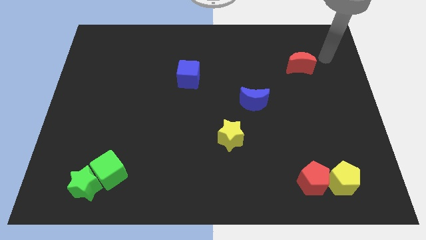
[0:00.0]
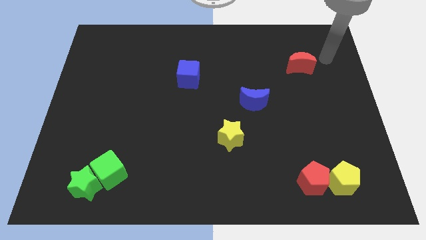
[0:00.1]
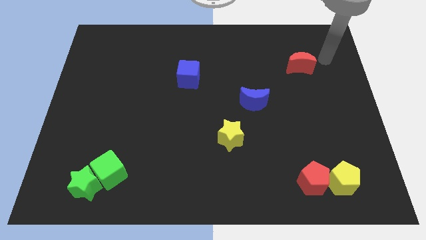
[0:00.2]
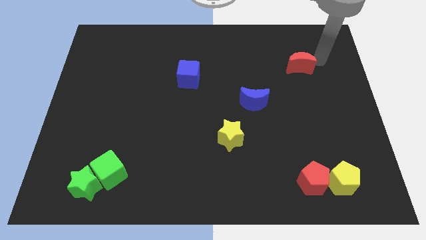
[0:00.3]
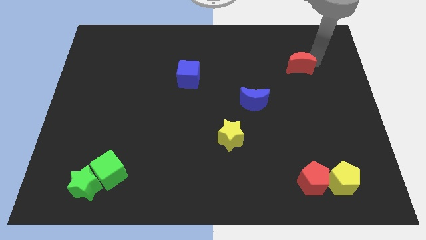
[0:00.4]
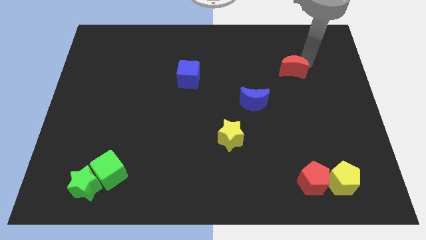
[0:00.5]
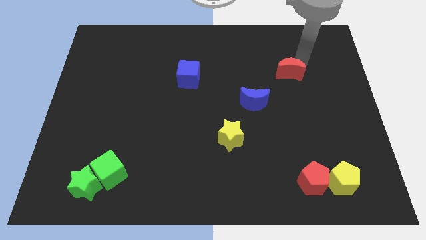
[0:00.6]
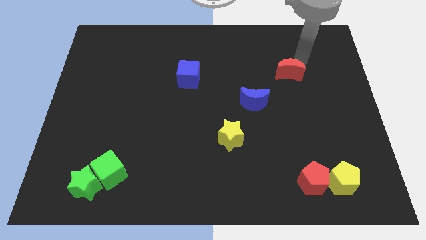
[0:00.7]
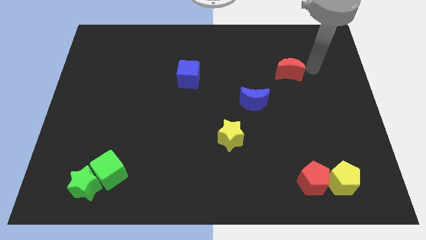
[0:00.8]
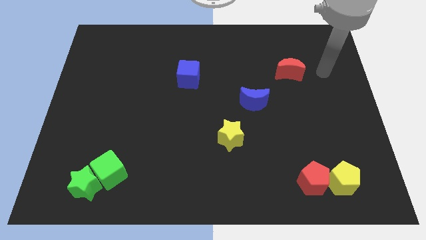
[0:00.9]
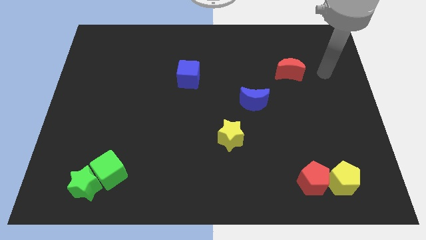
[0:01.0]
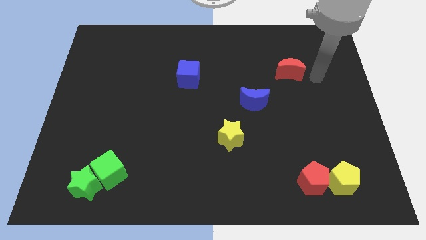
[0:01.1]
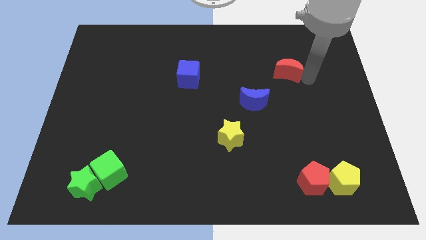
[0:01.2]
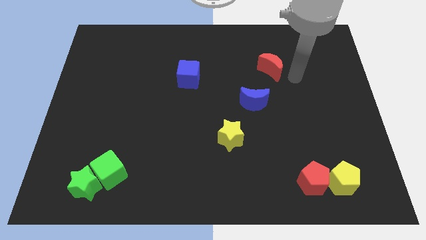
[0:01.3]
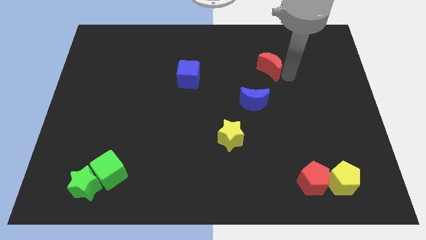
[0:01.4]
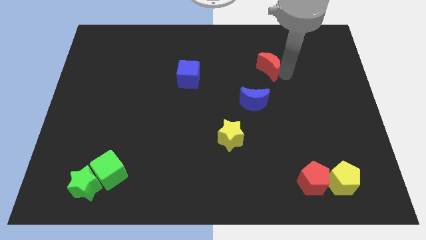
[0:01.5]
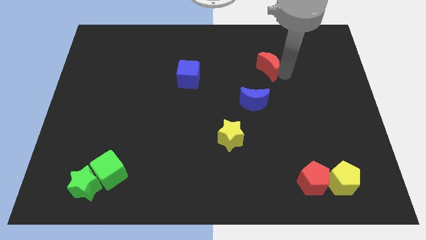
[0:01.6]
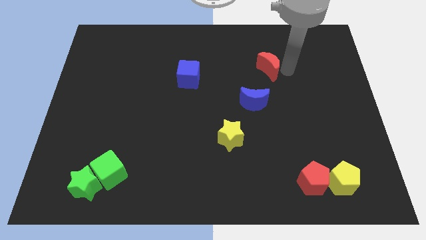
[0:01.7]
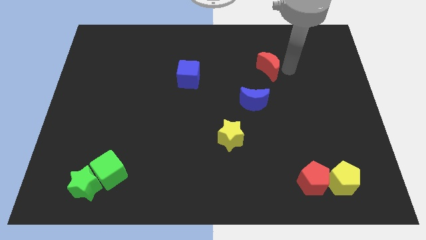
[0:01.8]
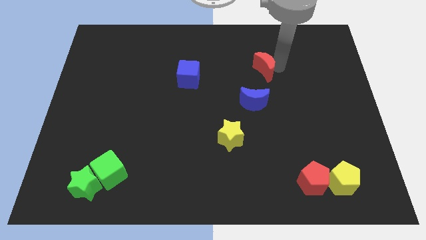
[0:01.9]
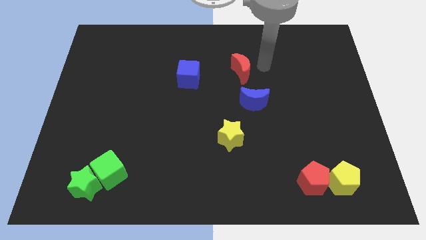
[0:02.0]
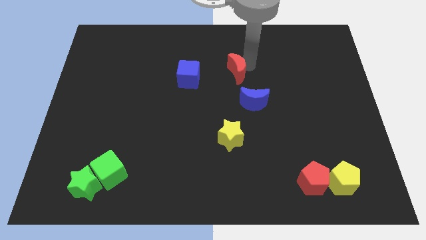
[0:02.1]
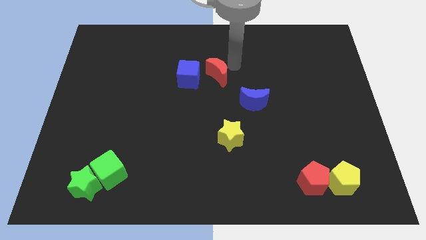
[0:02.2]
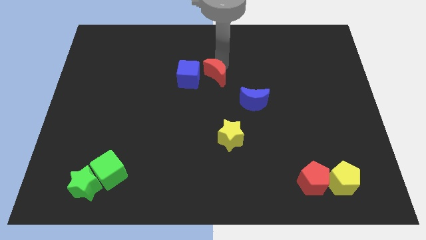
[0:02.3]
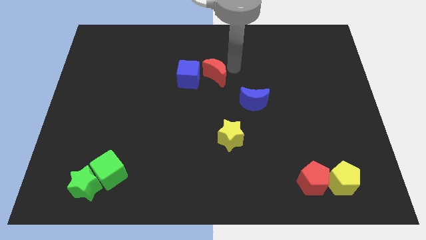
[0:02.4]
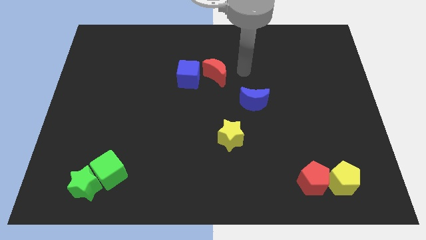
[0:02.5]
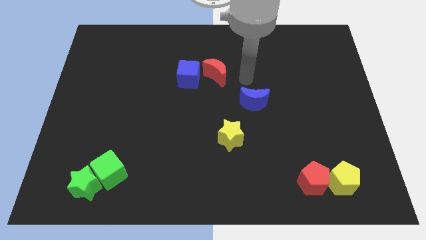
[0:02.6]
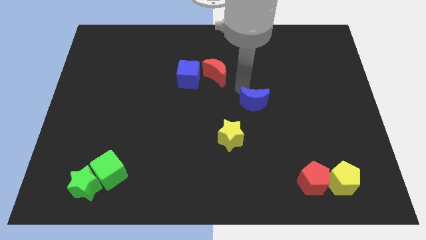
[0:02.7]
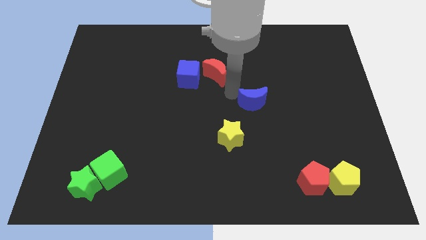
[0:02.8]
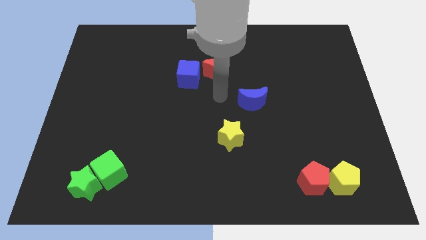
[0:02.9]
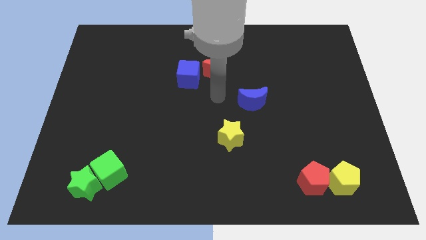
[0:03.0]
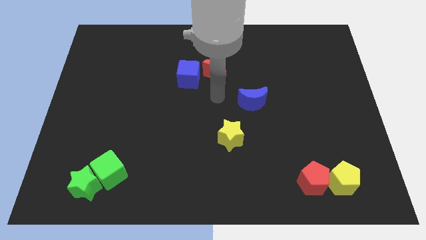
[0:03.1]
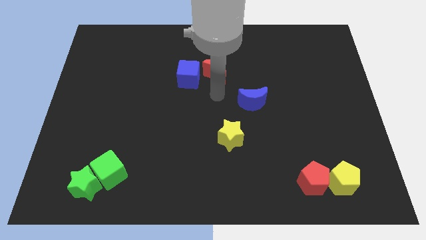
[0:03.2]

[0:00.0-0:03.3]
push the red crescent to the right side of the blue cube

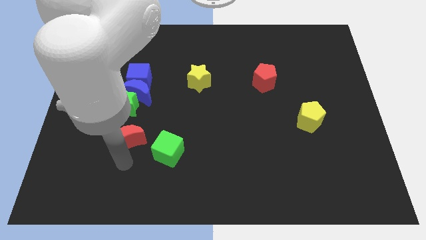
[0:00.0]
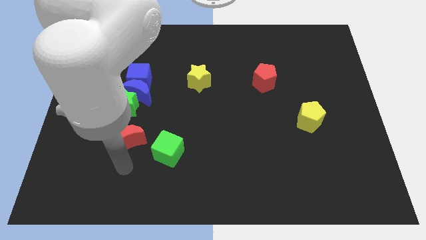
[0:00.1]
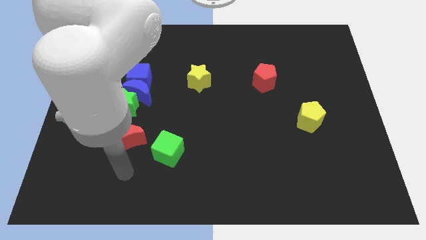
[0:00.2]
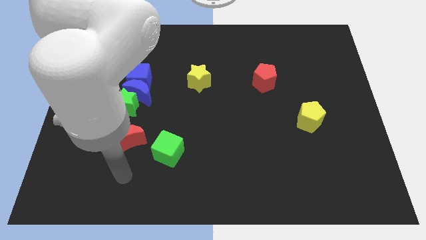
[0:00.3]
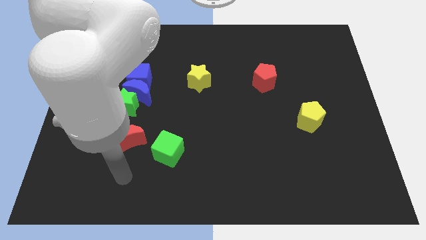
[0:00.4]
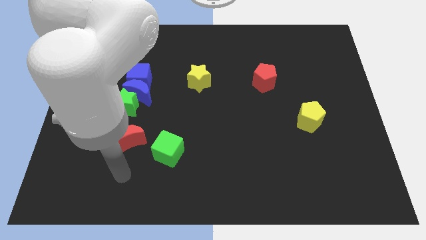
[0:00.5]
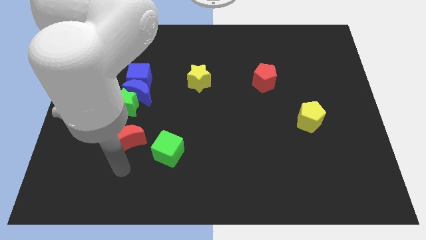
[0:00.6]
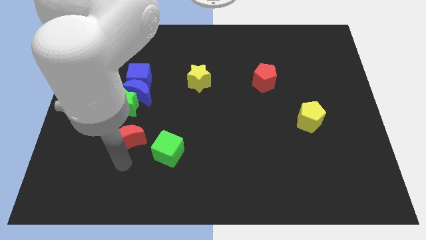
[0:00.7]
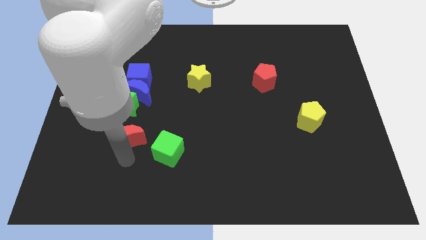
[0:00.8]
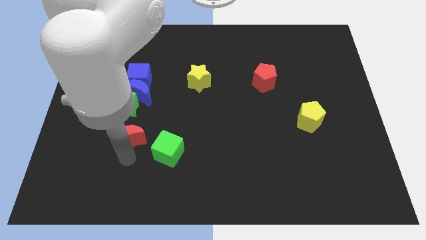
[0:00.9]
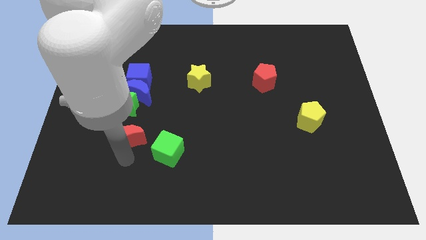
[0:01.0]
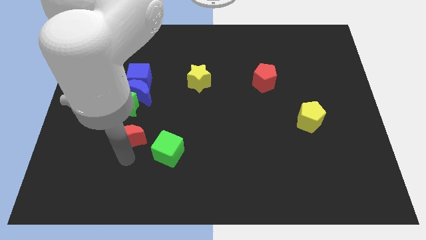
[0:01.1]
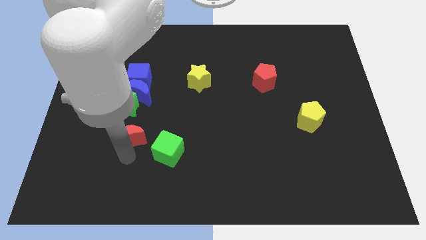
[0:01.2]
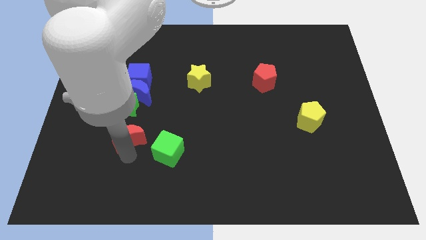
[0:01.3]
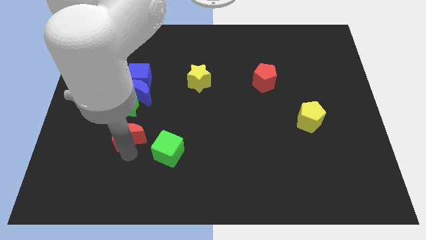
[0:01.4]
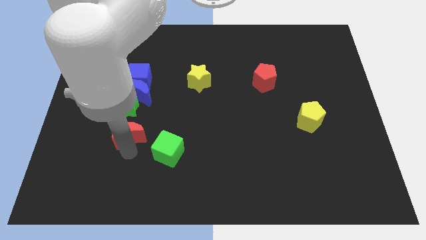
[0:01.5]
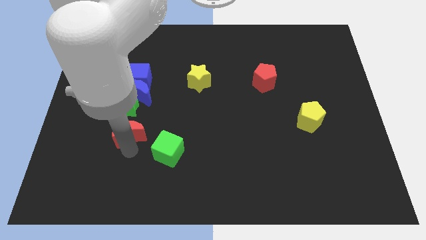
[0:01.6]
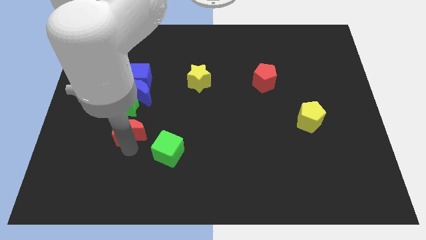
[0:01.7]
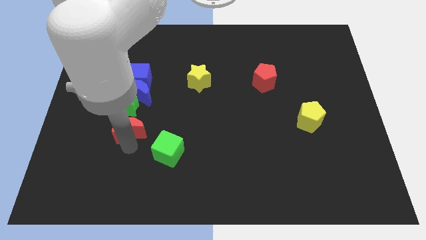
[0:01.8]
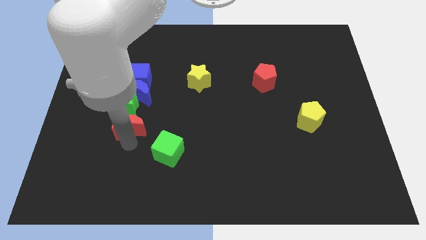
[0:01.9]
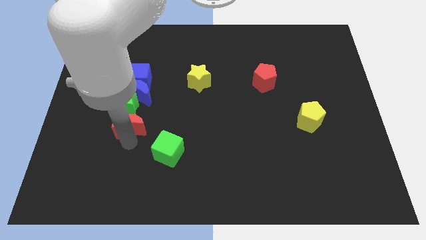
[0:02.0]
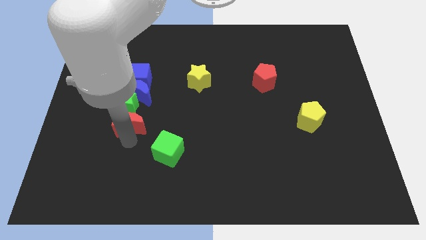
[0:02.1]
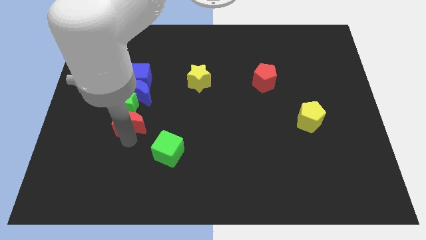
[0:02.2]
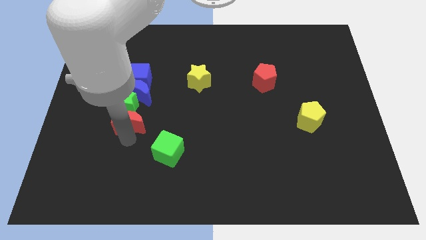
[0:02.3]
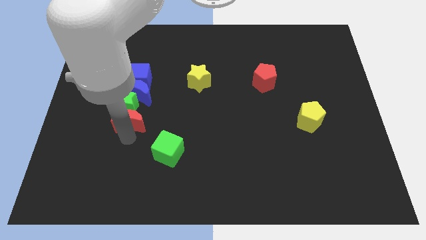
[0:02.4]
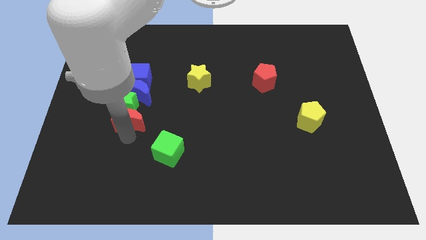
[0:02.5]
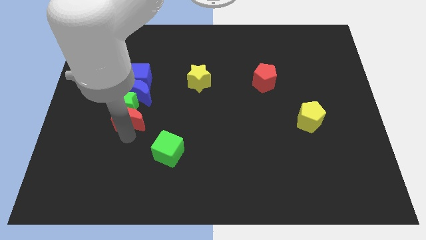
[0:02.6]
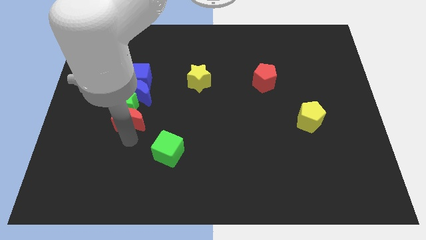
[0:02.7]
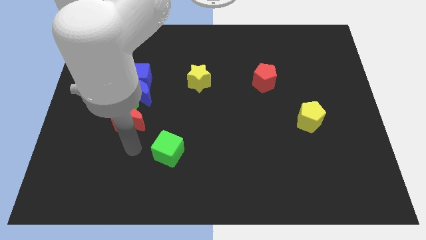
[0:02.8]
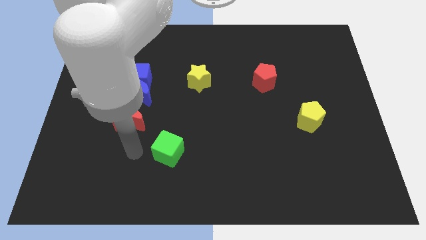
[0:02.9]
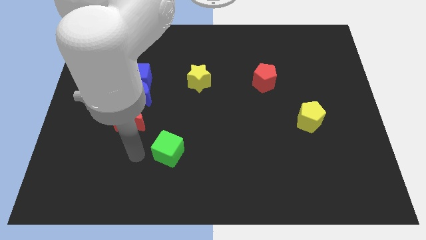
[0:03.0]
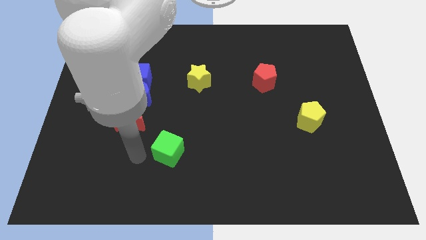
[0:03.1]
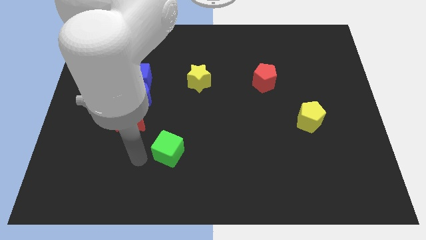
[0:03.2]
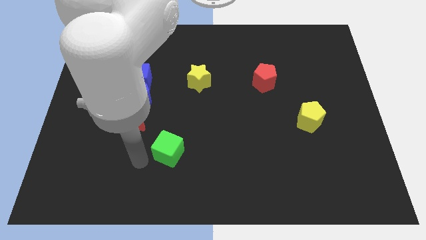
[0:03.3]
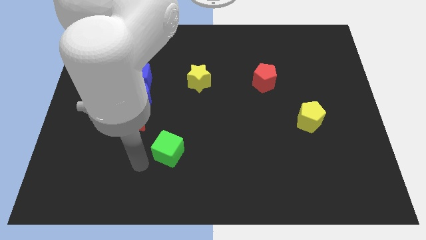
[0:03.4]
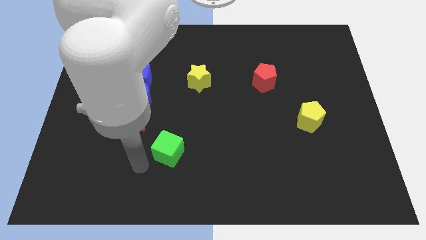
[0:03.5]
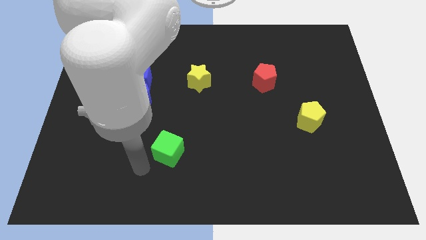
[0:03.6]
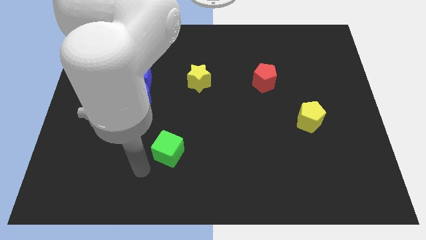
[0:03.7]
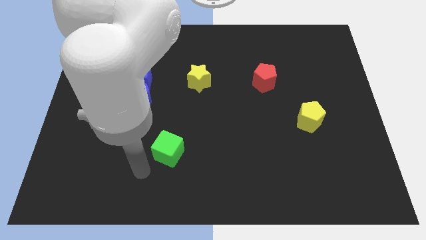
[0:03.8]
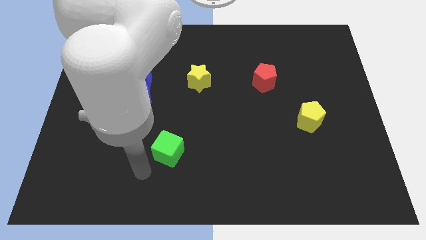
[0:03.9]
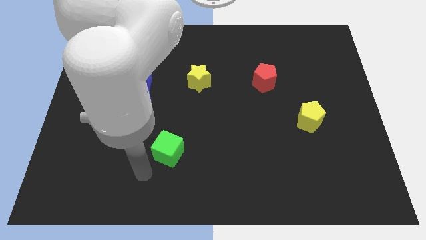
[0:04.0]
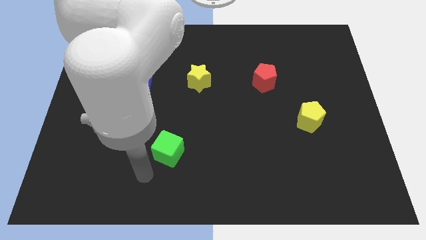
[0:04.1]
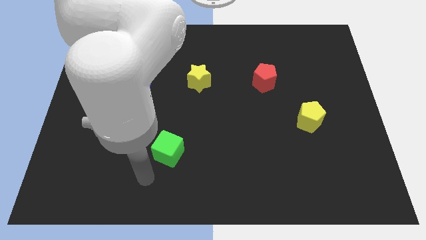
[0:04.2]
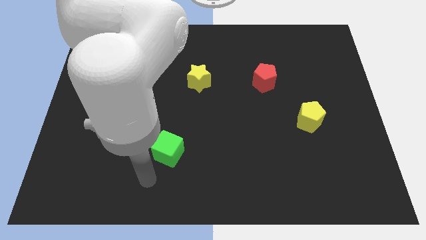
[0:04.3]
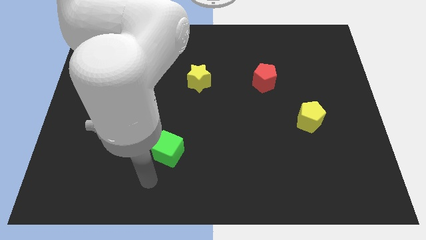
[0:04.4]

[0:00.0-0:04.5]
push red moon below green star

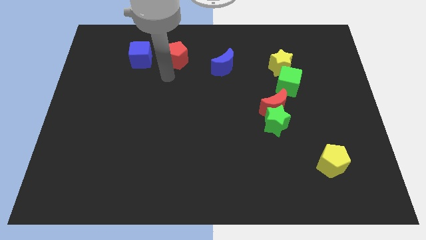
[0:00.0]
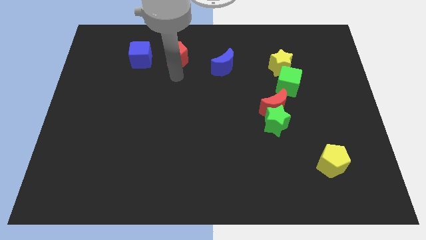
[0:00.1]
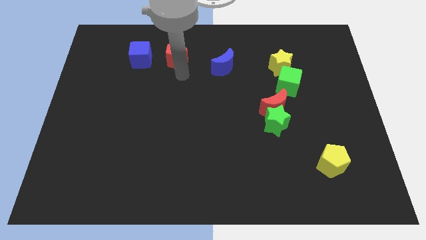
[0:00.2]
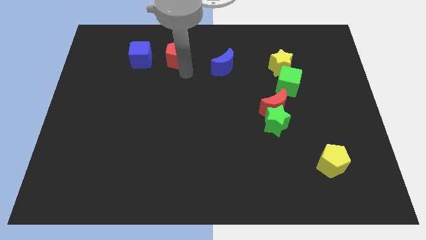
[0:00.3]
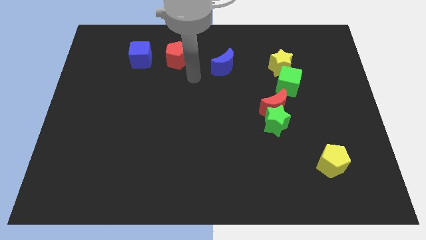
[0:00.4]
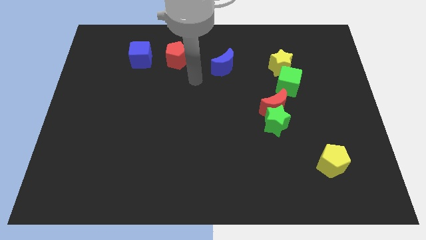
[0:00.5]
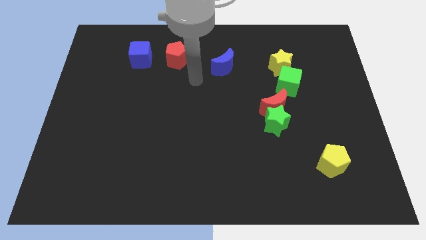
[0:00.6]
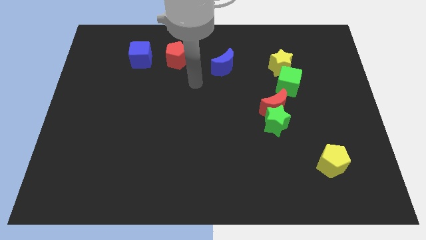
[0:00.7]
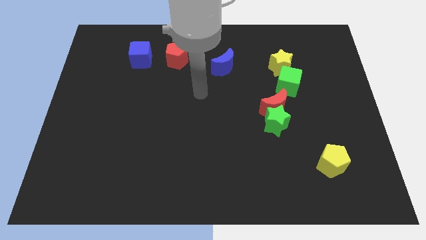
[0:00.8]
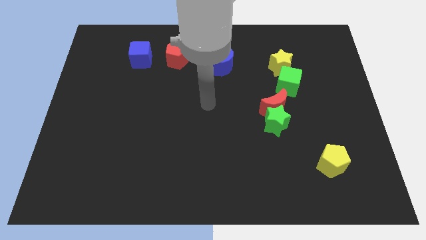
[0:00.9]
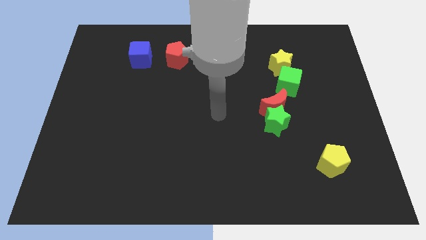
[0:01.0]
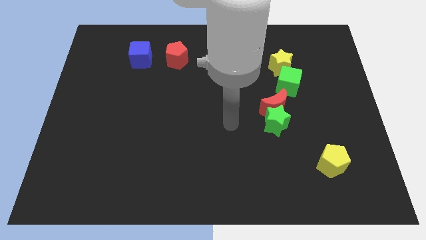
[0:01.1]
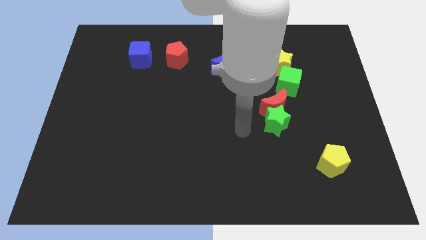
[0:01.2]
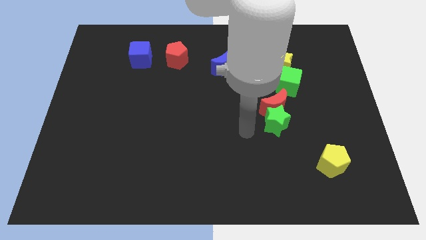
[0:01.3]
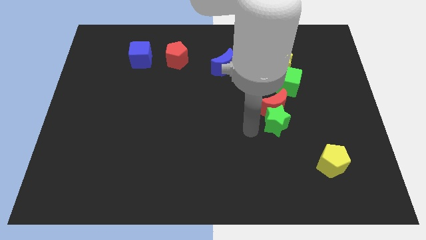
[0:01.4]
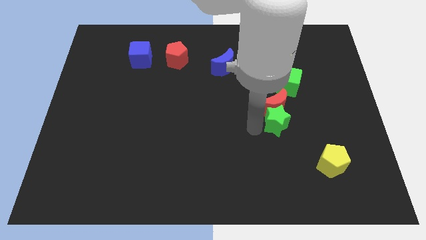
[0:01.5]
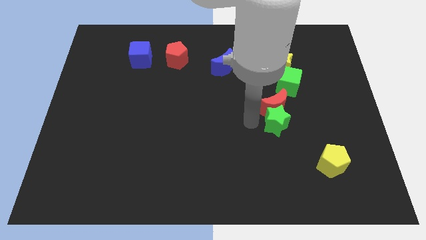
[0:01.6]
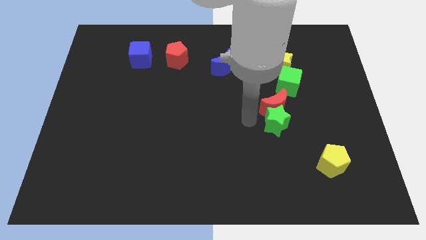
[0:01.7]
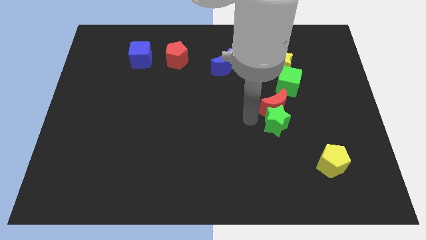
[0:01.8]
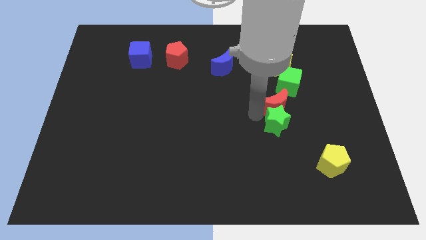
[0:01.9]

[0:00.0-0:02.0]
move your arm towards the red crescent
